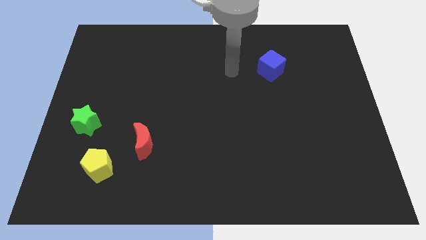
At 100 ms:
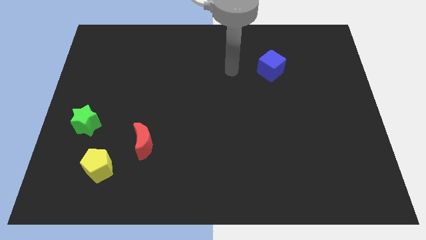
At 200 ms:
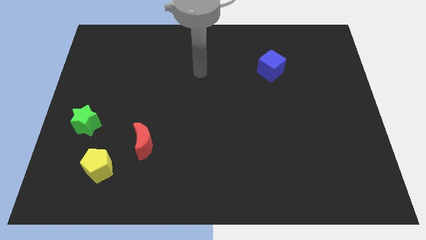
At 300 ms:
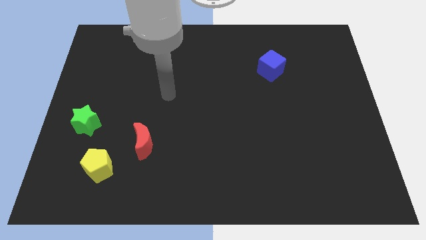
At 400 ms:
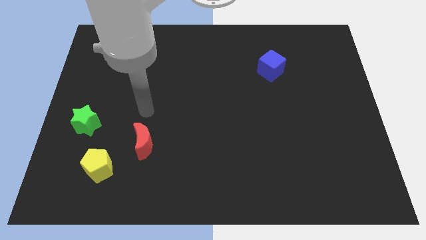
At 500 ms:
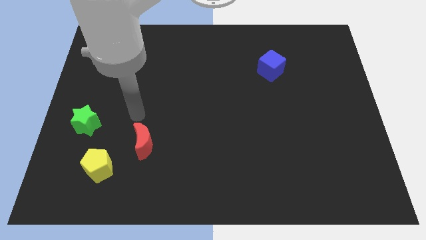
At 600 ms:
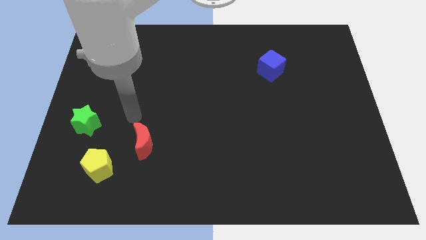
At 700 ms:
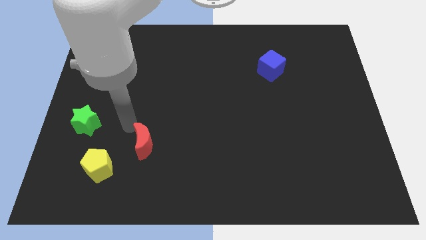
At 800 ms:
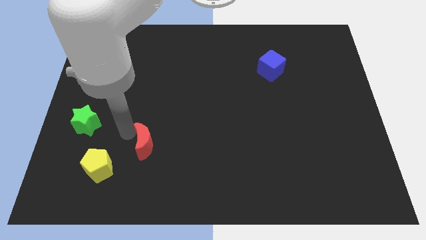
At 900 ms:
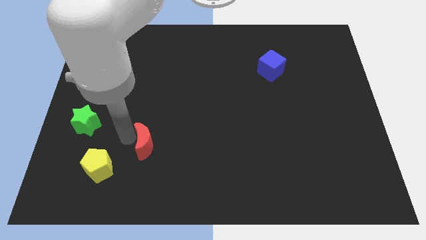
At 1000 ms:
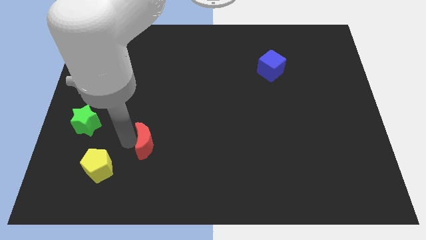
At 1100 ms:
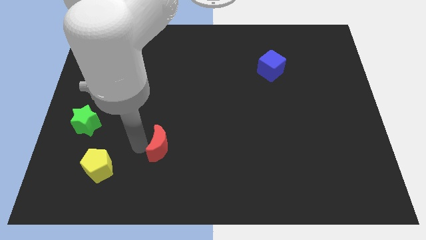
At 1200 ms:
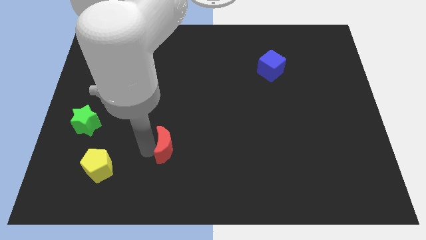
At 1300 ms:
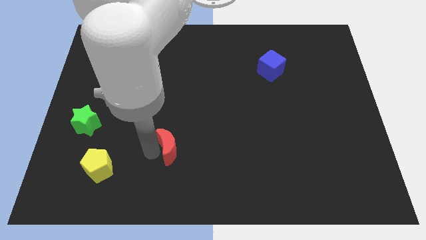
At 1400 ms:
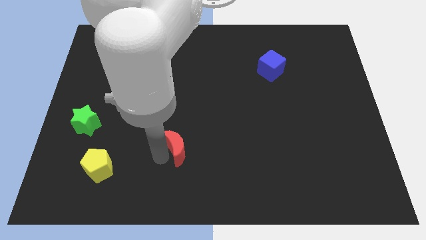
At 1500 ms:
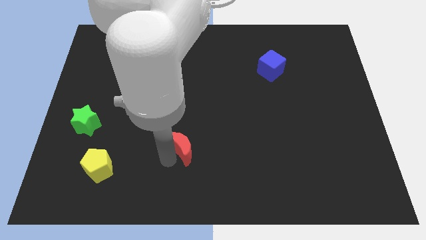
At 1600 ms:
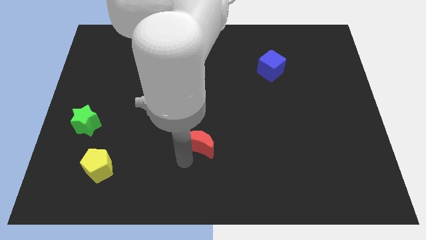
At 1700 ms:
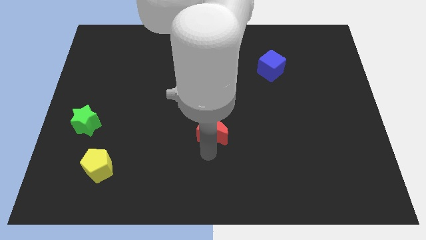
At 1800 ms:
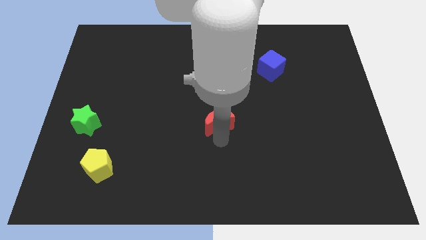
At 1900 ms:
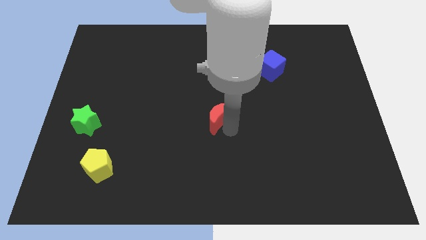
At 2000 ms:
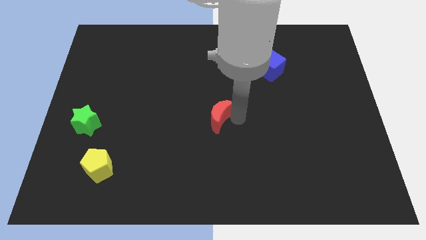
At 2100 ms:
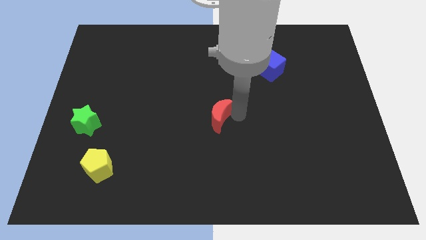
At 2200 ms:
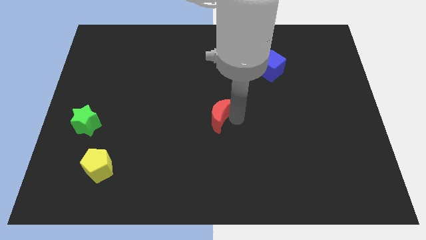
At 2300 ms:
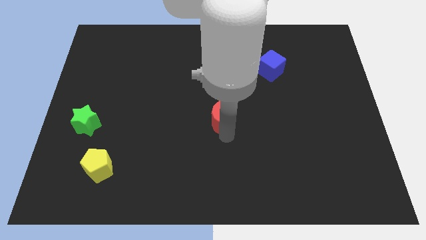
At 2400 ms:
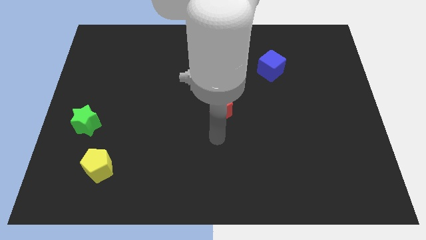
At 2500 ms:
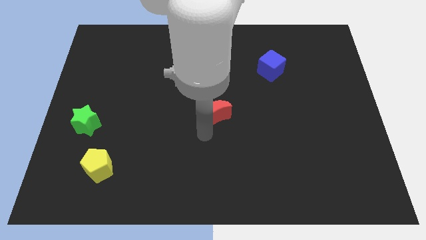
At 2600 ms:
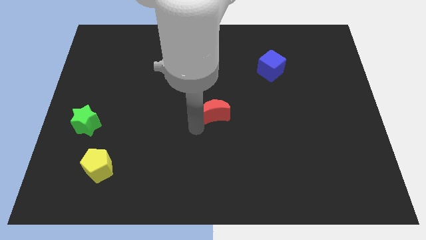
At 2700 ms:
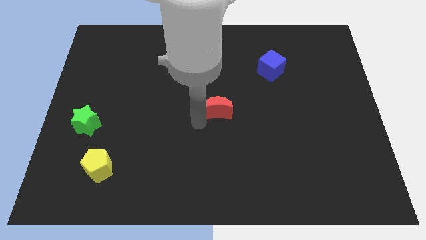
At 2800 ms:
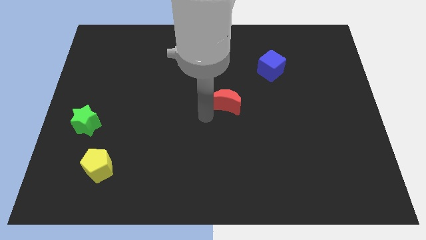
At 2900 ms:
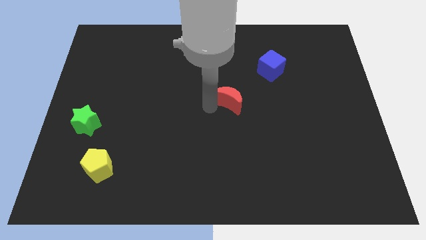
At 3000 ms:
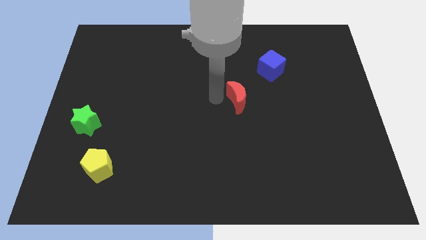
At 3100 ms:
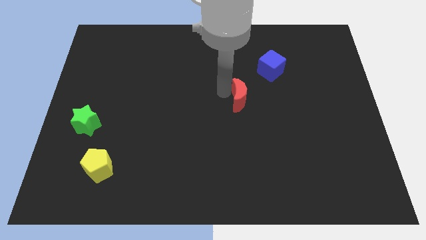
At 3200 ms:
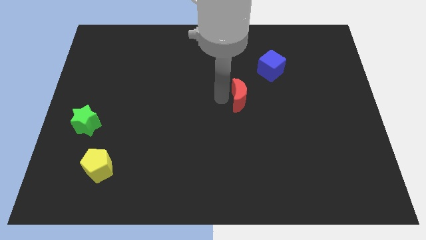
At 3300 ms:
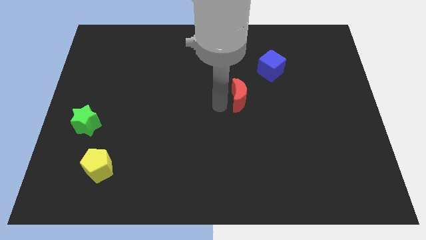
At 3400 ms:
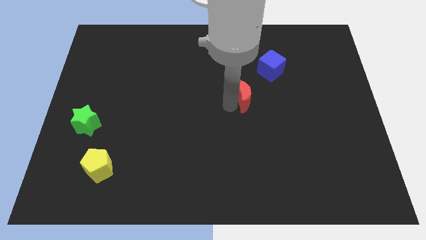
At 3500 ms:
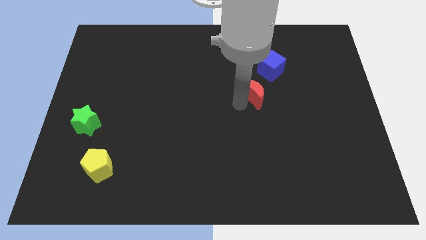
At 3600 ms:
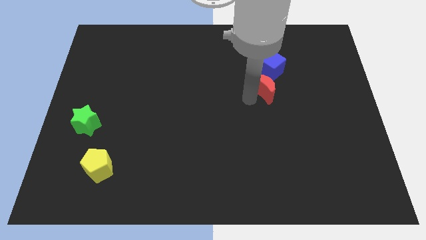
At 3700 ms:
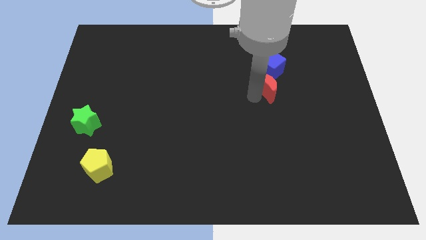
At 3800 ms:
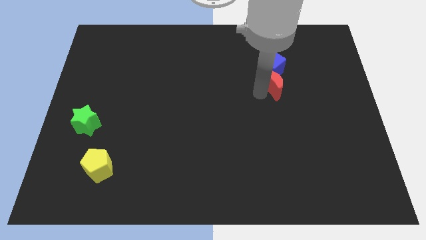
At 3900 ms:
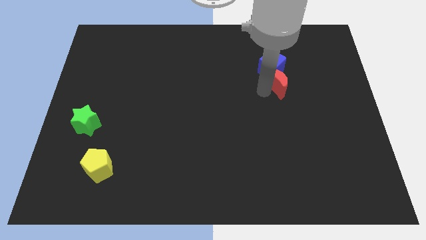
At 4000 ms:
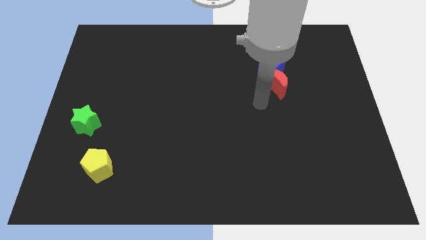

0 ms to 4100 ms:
move the moon next to the cube

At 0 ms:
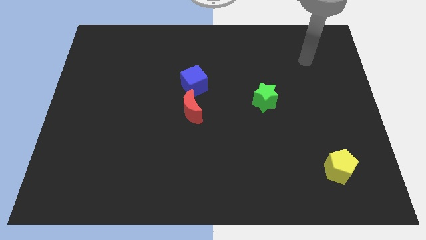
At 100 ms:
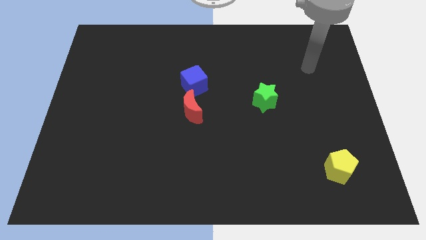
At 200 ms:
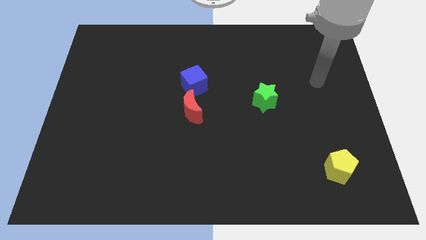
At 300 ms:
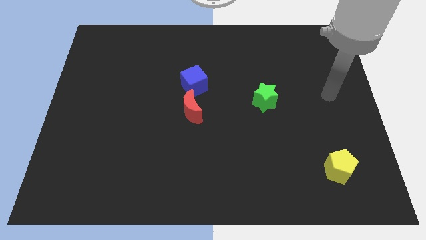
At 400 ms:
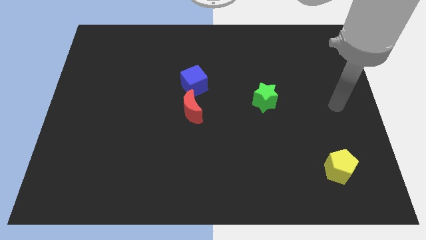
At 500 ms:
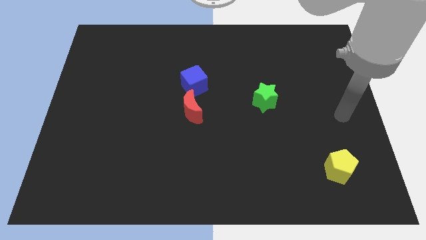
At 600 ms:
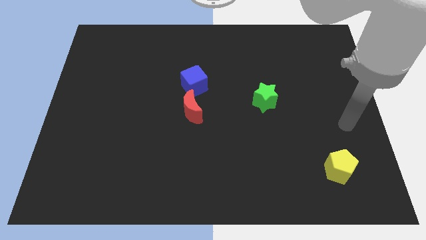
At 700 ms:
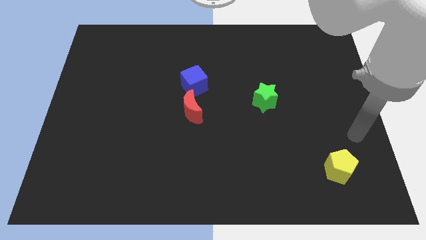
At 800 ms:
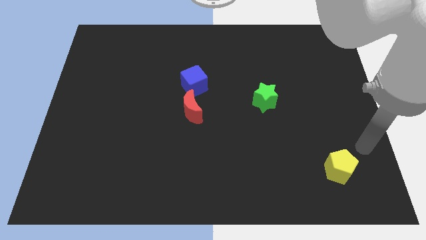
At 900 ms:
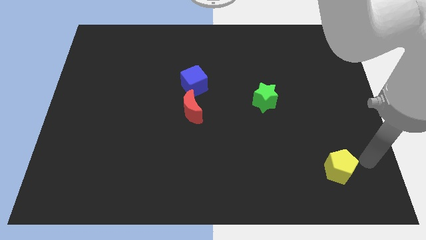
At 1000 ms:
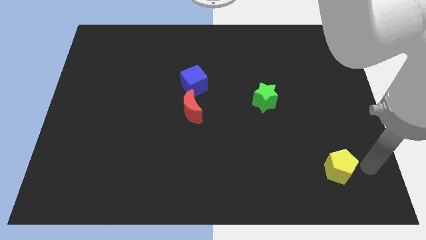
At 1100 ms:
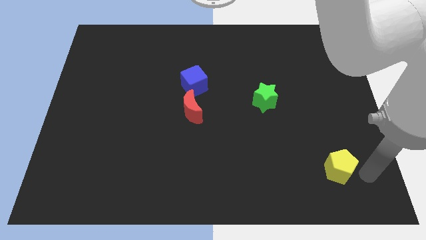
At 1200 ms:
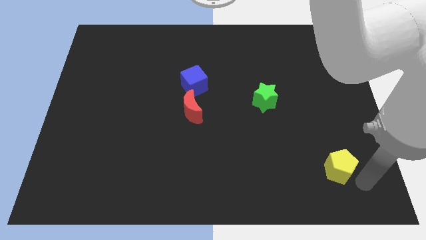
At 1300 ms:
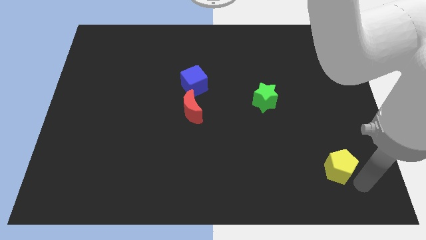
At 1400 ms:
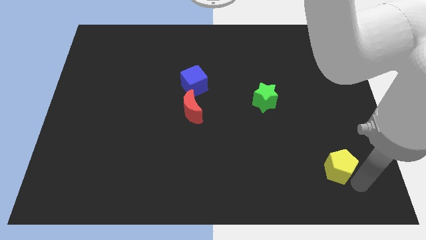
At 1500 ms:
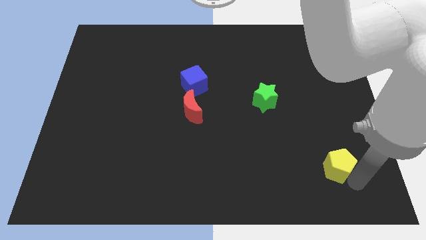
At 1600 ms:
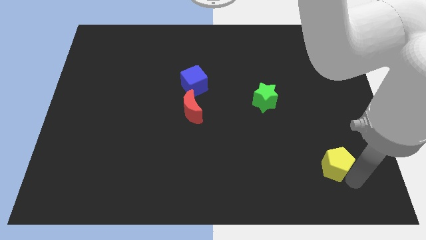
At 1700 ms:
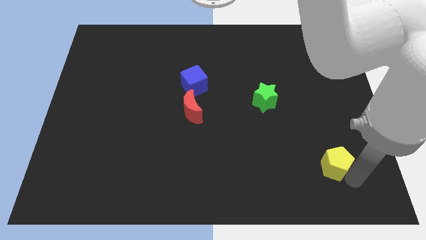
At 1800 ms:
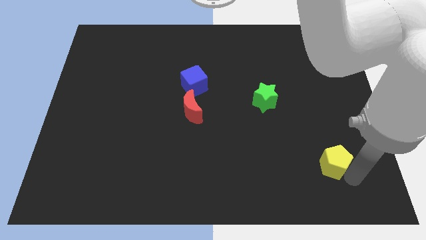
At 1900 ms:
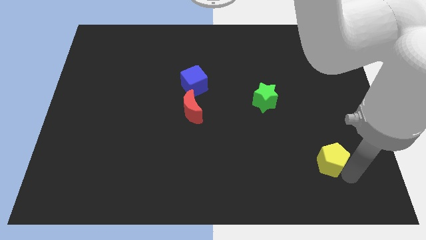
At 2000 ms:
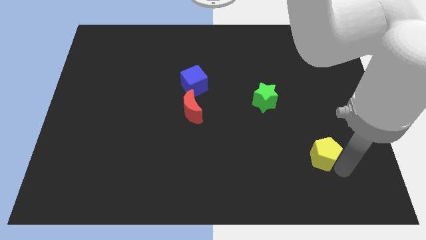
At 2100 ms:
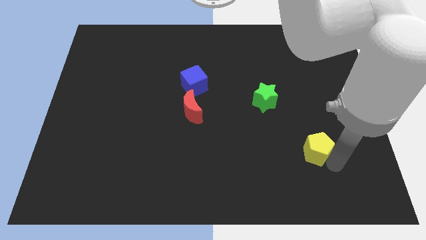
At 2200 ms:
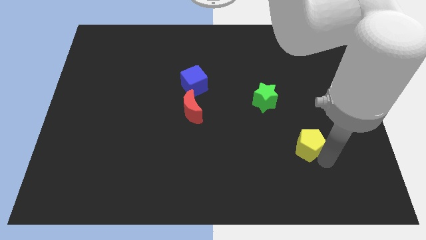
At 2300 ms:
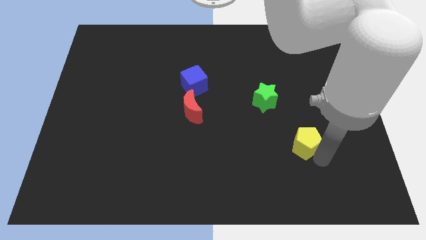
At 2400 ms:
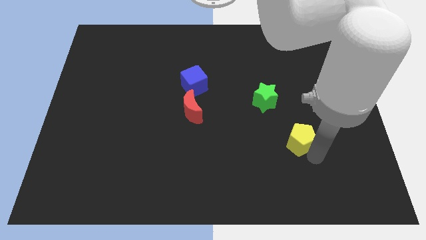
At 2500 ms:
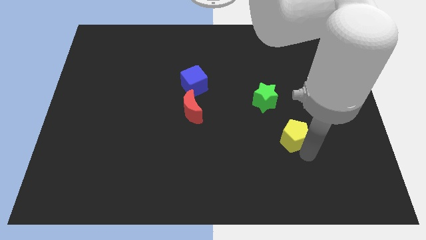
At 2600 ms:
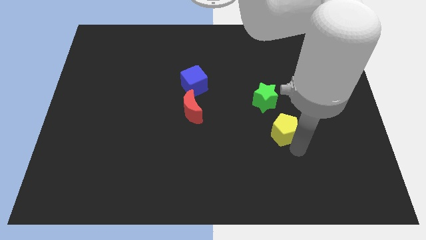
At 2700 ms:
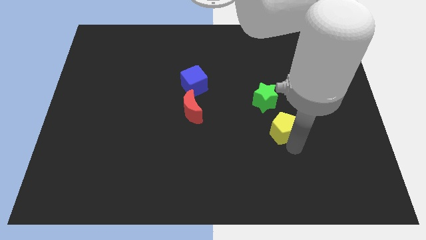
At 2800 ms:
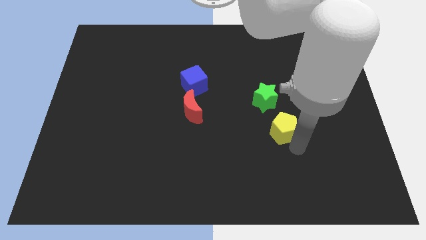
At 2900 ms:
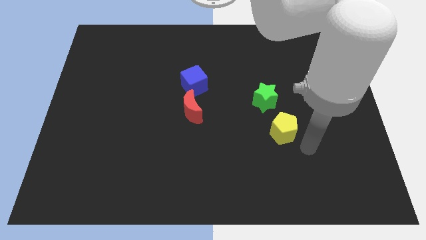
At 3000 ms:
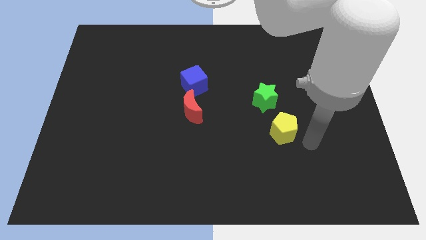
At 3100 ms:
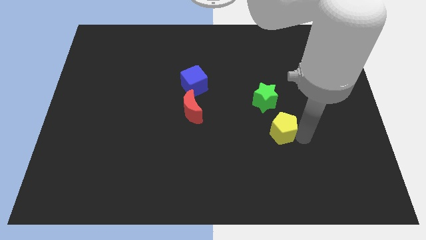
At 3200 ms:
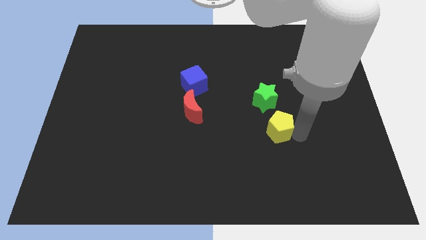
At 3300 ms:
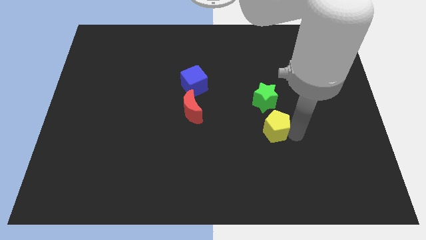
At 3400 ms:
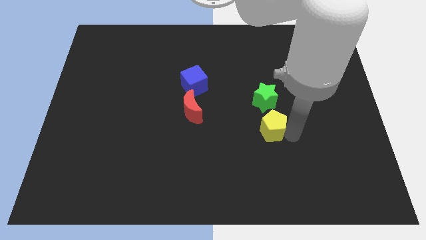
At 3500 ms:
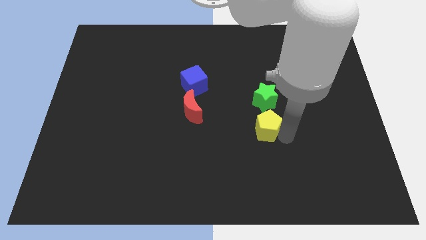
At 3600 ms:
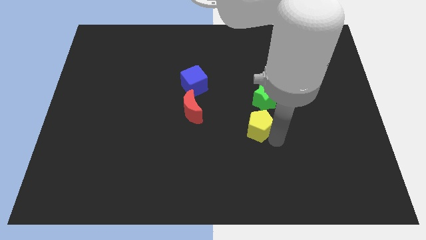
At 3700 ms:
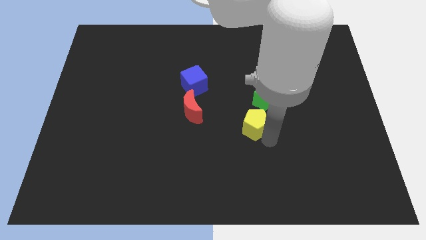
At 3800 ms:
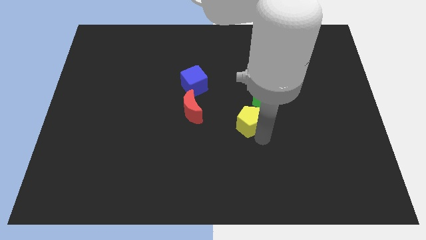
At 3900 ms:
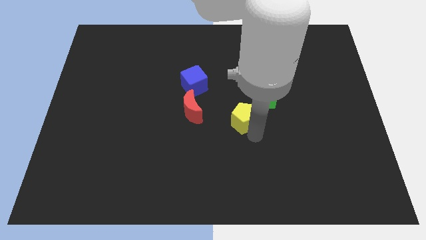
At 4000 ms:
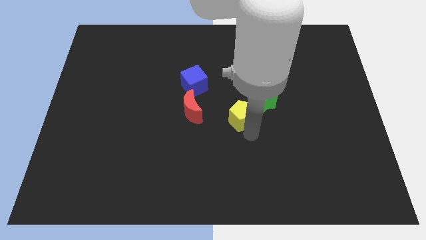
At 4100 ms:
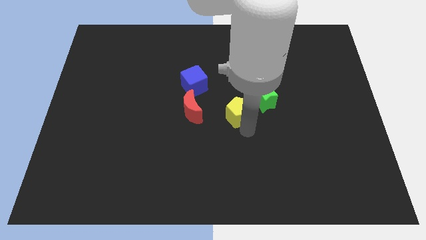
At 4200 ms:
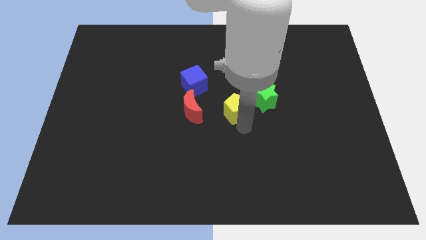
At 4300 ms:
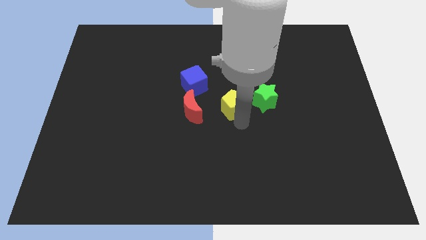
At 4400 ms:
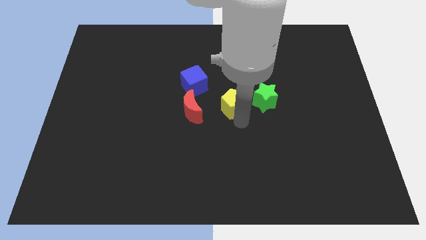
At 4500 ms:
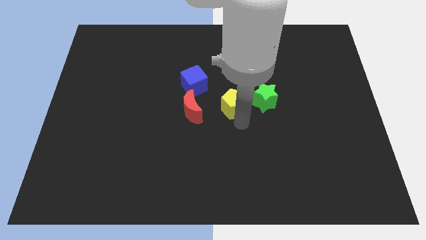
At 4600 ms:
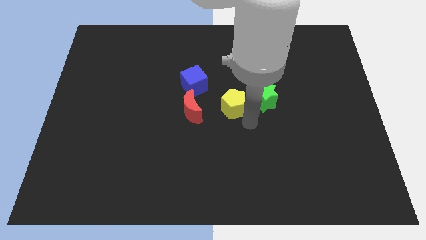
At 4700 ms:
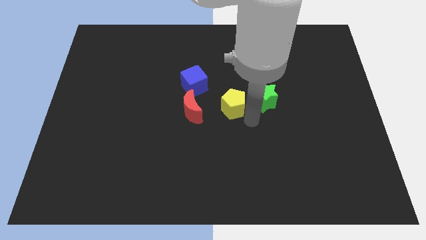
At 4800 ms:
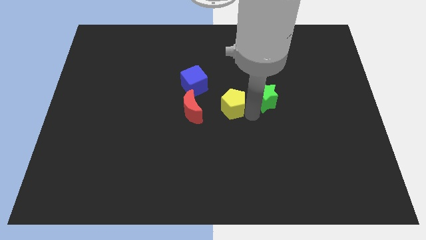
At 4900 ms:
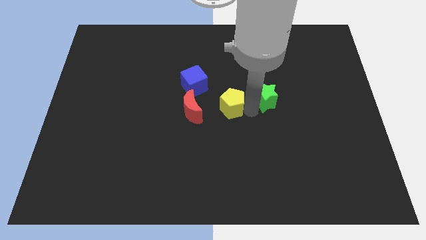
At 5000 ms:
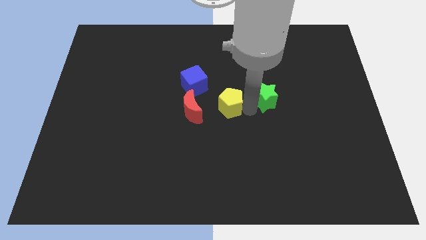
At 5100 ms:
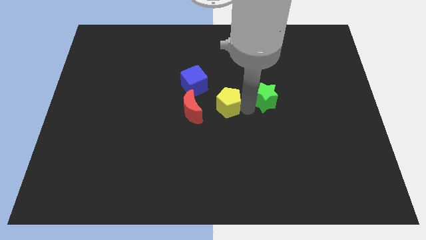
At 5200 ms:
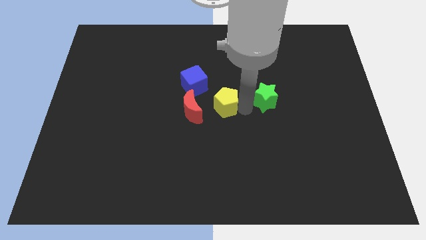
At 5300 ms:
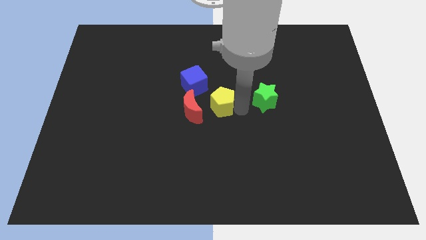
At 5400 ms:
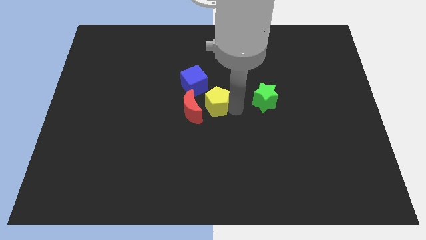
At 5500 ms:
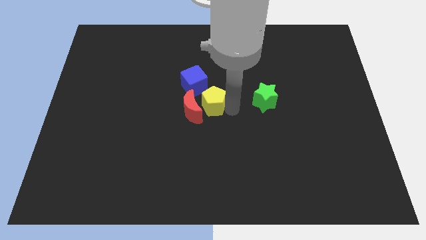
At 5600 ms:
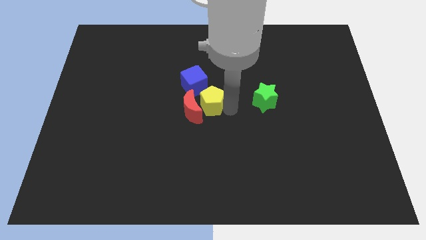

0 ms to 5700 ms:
put the yellow pentagon towards the red moon
